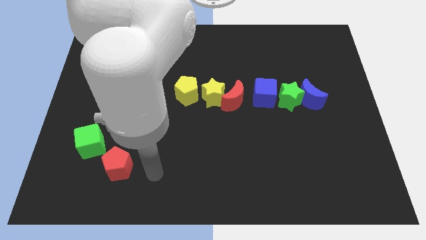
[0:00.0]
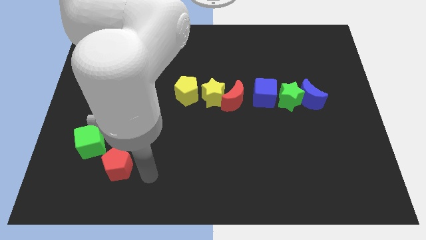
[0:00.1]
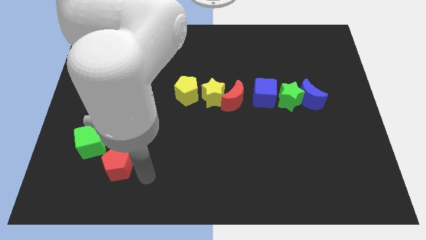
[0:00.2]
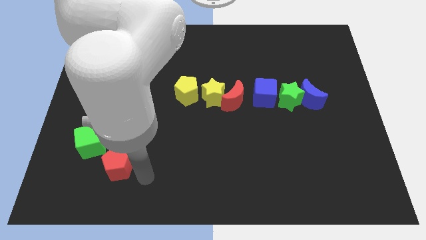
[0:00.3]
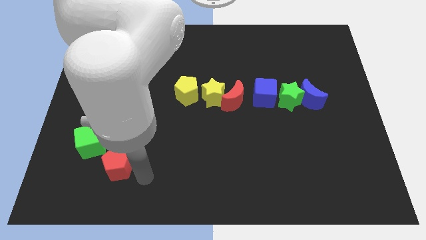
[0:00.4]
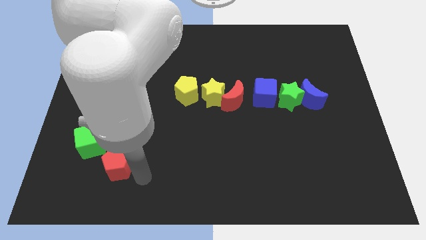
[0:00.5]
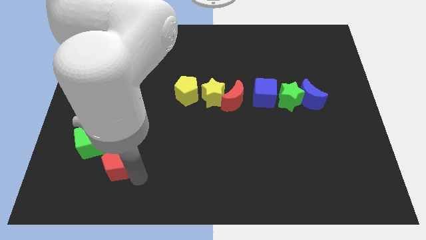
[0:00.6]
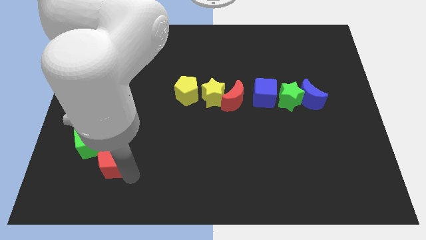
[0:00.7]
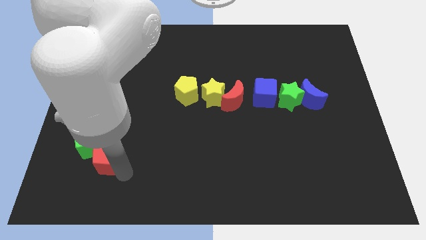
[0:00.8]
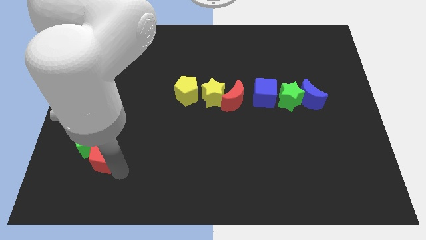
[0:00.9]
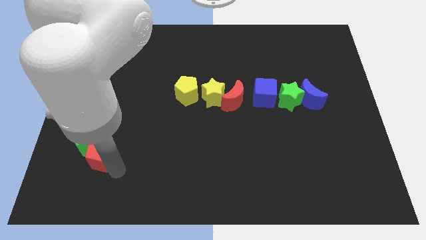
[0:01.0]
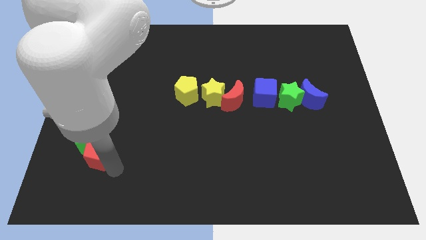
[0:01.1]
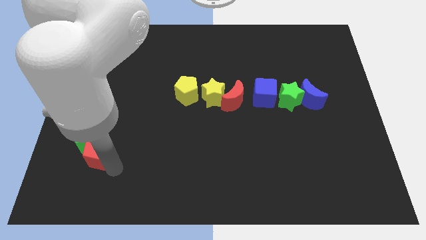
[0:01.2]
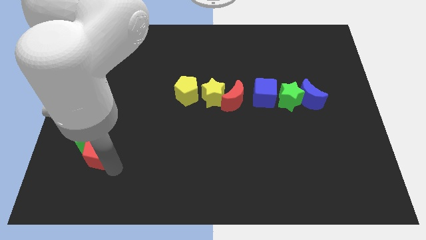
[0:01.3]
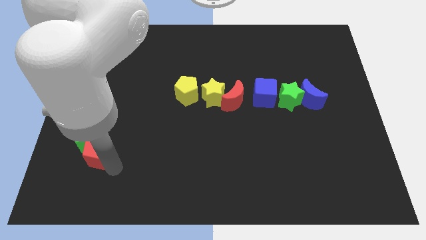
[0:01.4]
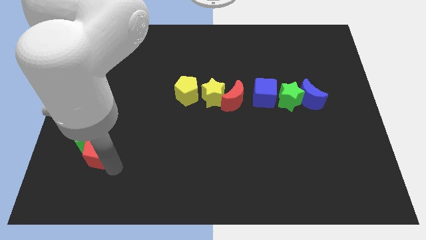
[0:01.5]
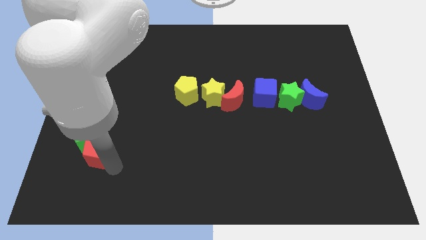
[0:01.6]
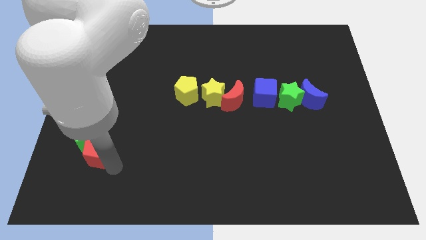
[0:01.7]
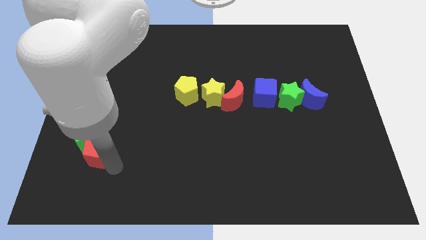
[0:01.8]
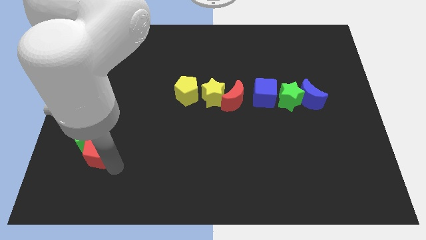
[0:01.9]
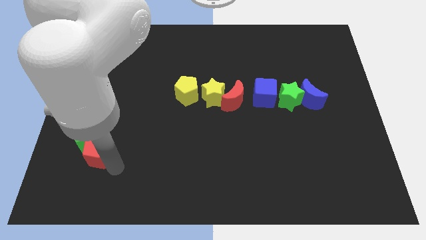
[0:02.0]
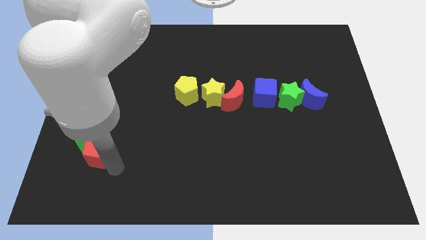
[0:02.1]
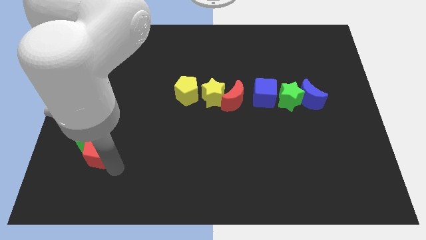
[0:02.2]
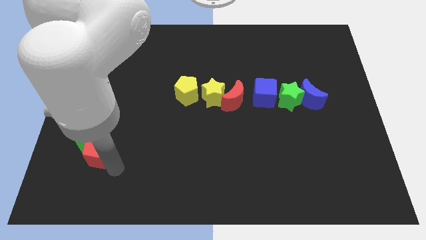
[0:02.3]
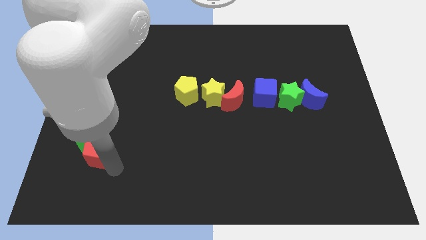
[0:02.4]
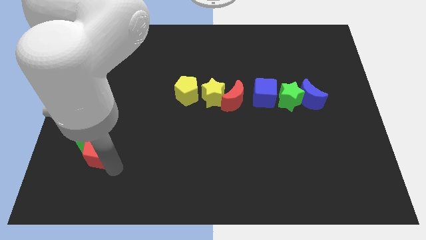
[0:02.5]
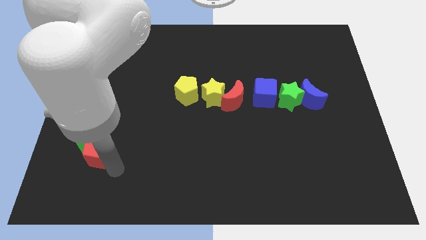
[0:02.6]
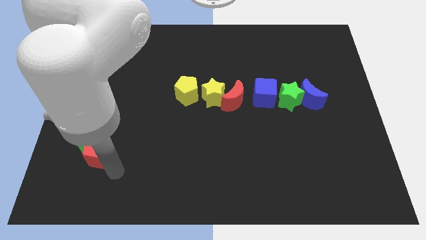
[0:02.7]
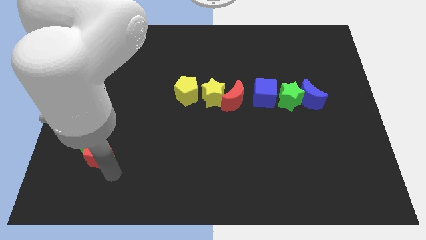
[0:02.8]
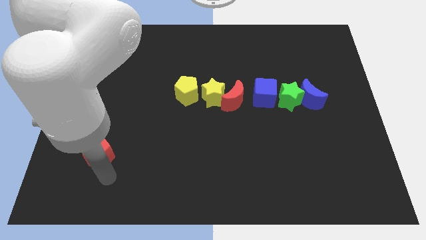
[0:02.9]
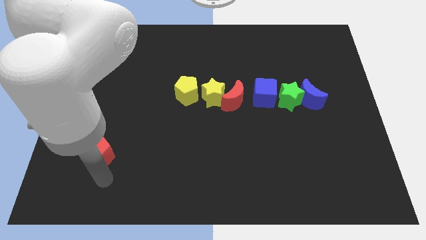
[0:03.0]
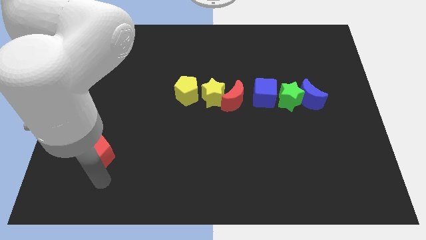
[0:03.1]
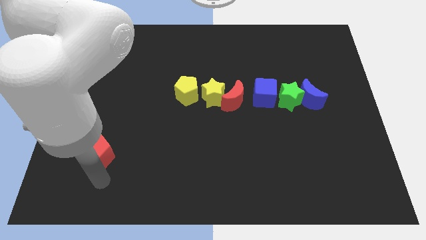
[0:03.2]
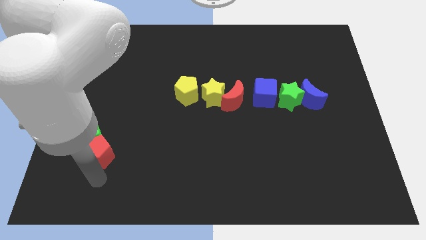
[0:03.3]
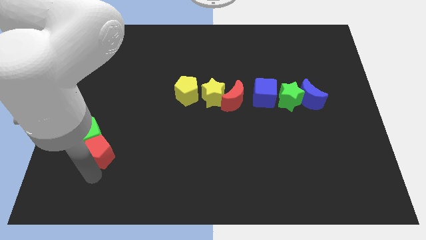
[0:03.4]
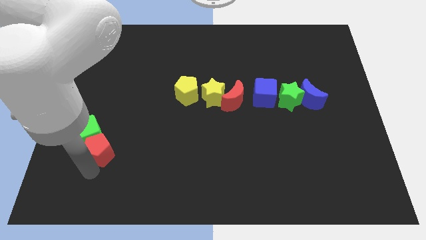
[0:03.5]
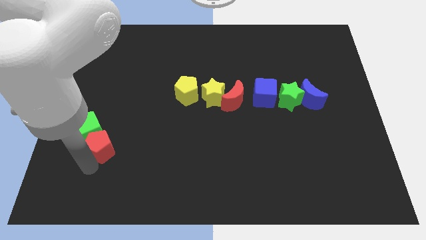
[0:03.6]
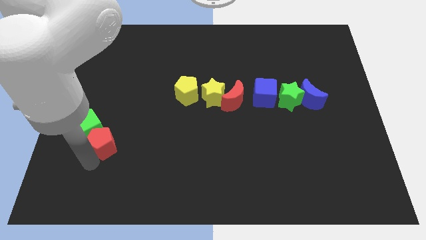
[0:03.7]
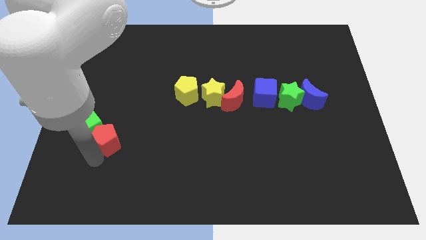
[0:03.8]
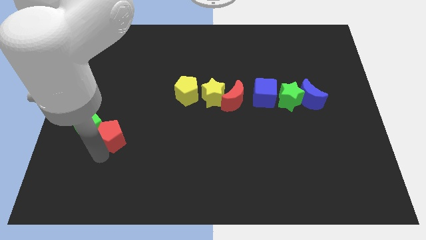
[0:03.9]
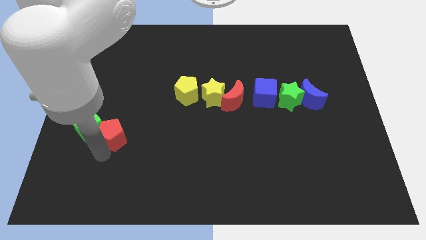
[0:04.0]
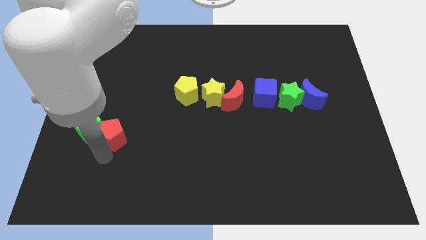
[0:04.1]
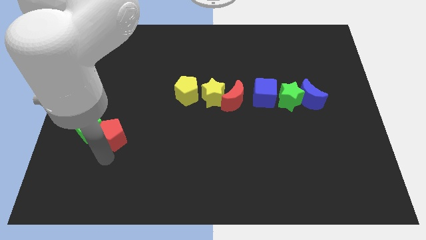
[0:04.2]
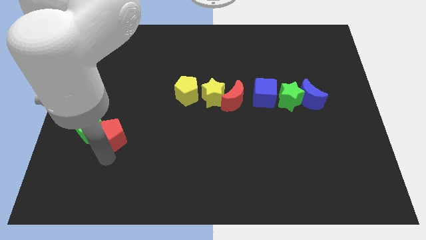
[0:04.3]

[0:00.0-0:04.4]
move the red pentagon into the green cube towards the left center

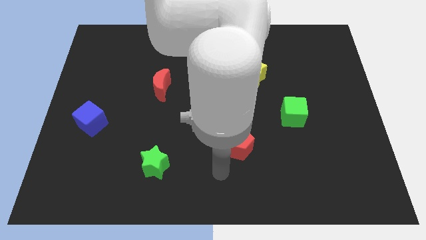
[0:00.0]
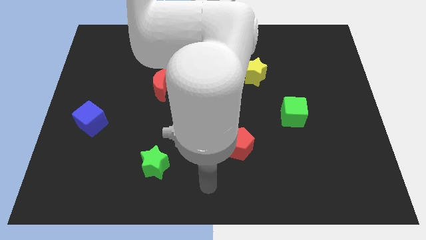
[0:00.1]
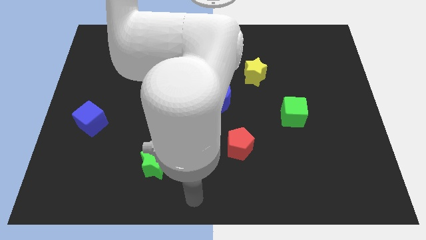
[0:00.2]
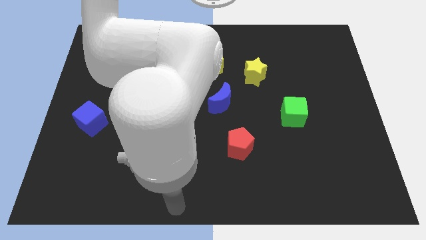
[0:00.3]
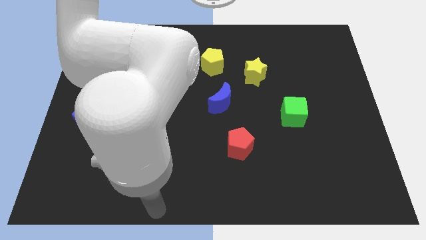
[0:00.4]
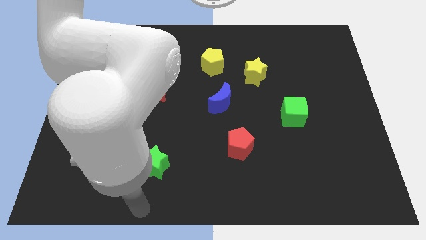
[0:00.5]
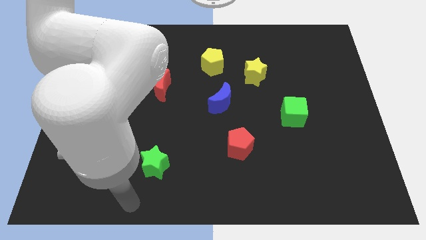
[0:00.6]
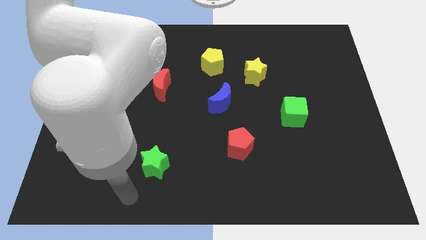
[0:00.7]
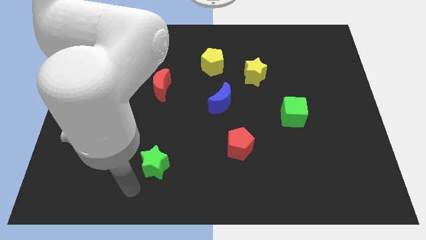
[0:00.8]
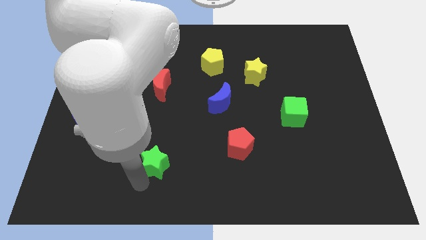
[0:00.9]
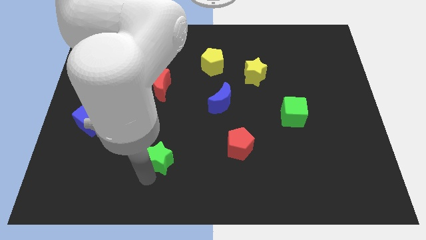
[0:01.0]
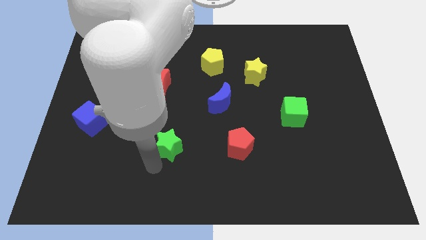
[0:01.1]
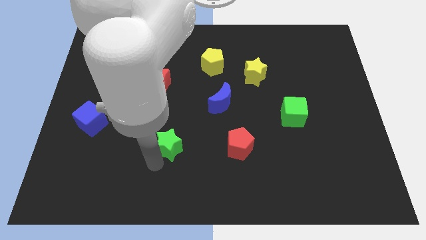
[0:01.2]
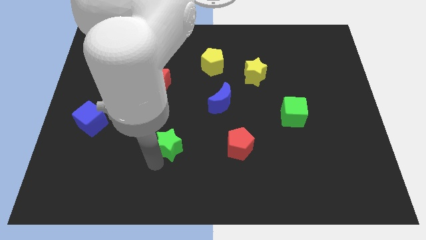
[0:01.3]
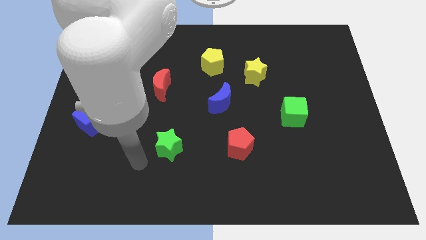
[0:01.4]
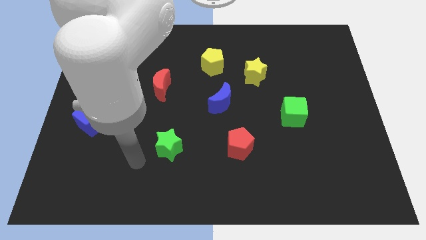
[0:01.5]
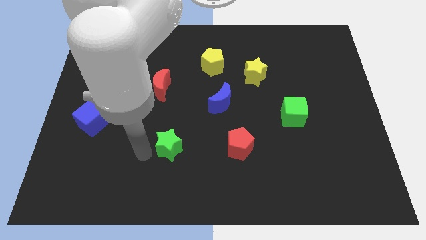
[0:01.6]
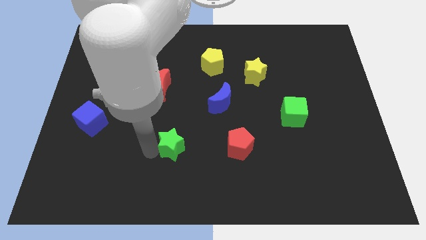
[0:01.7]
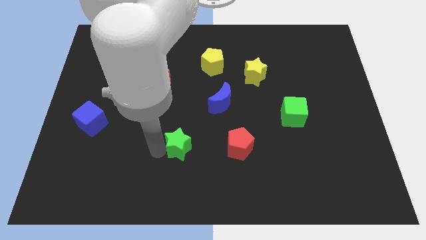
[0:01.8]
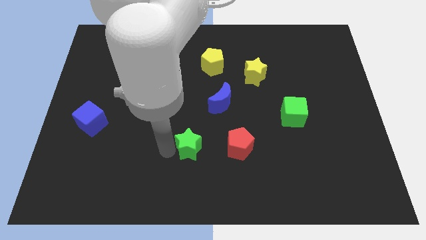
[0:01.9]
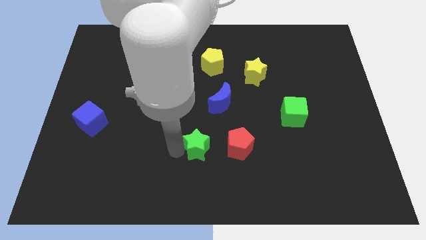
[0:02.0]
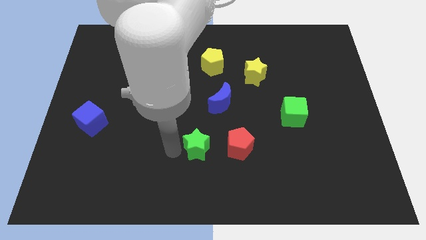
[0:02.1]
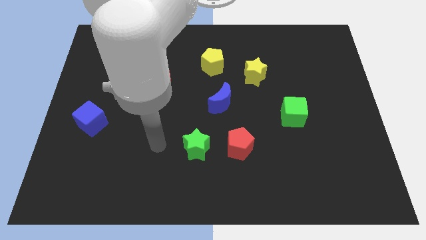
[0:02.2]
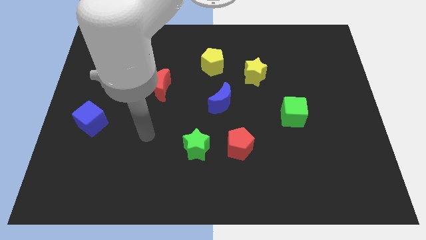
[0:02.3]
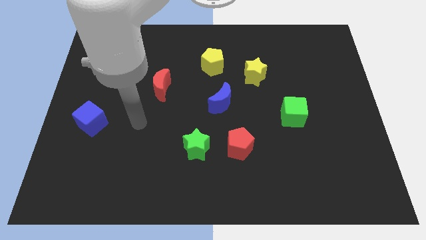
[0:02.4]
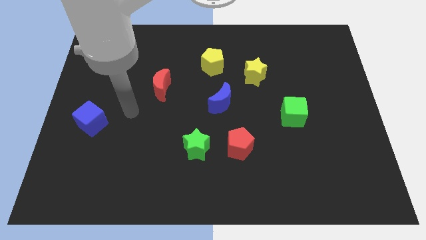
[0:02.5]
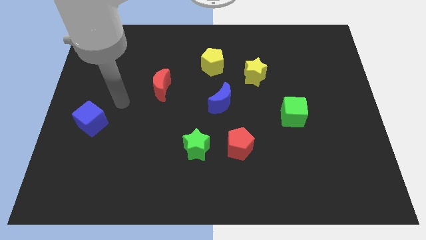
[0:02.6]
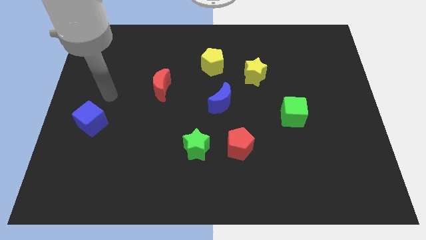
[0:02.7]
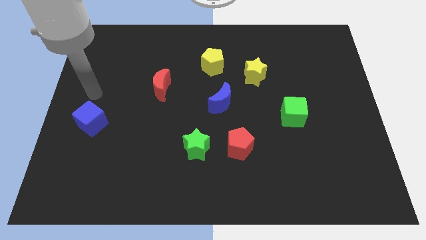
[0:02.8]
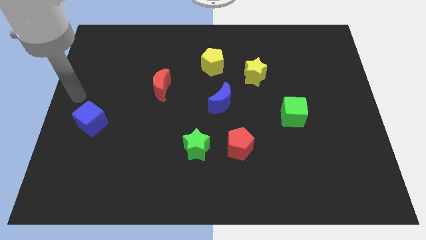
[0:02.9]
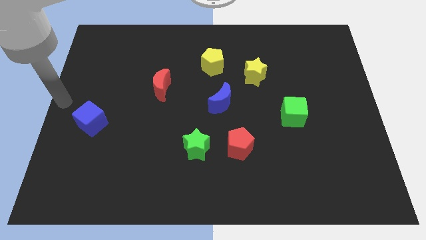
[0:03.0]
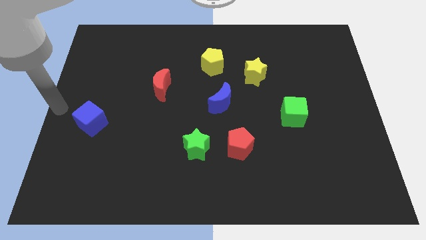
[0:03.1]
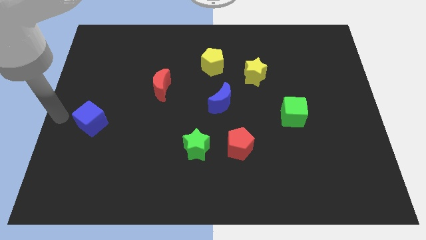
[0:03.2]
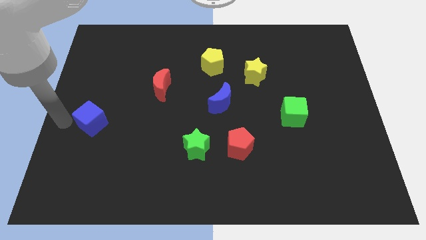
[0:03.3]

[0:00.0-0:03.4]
move the green star to the left side of the red pentagon

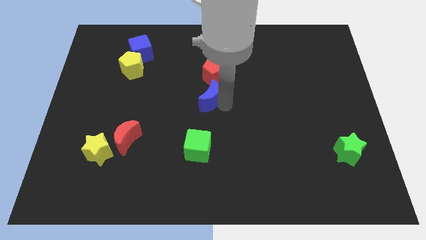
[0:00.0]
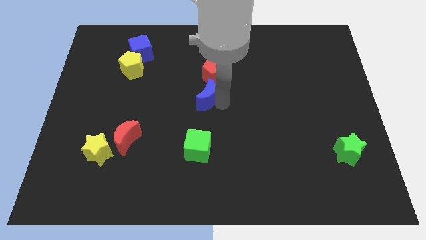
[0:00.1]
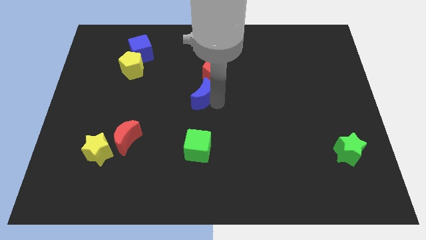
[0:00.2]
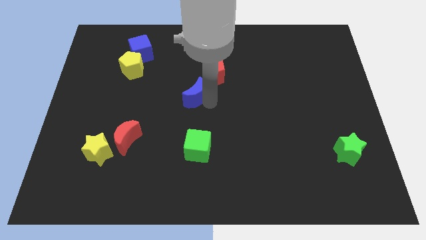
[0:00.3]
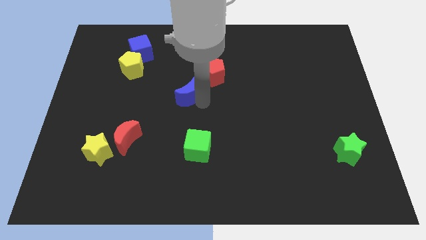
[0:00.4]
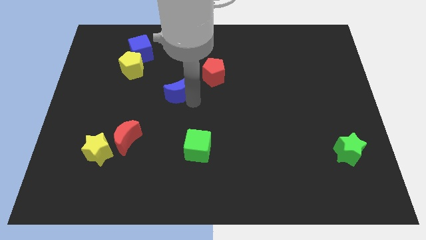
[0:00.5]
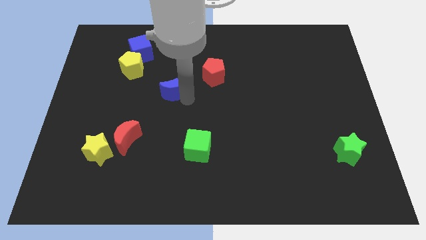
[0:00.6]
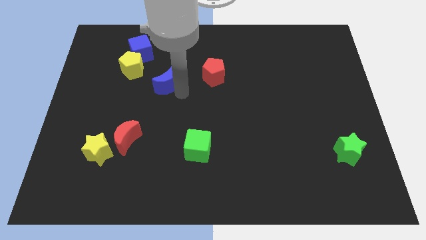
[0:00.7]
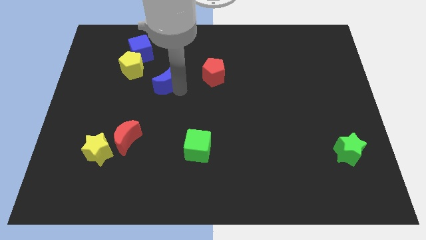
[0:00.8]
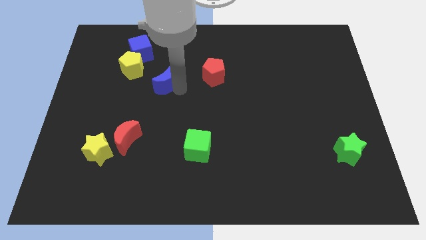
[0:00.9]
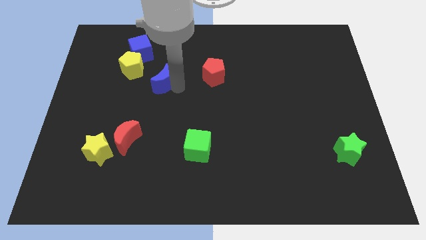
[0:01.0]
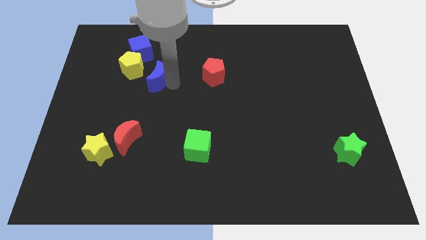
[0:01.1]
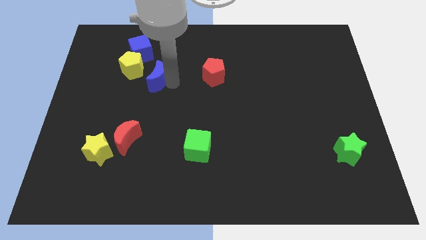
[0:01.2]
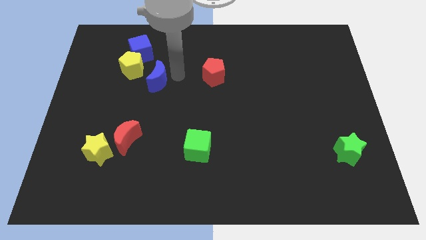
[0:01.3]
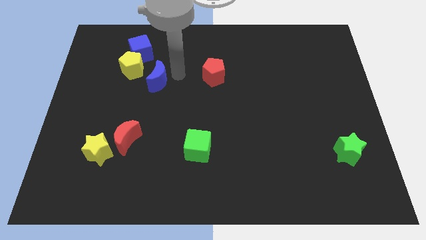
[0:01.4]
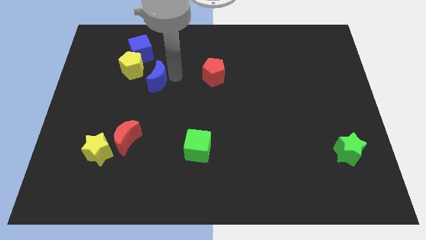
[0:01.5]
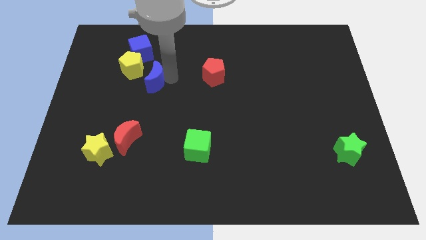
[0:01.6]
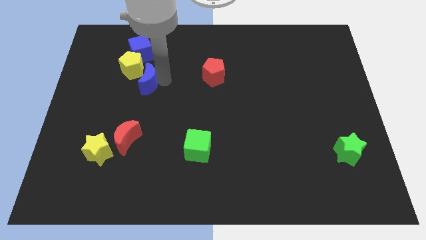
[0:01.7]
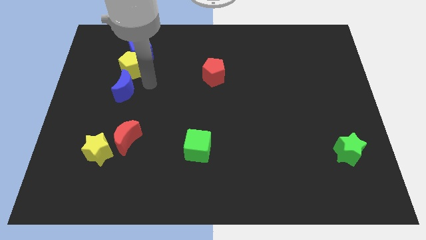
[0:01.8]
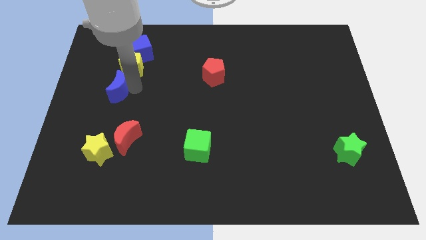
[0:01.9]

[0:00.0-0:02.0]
put the blue moon below the yellow pentagon
